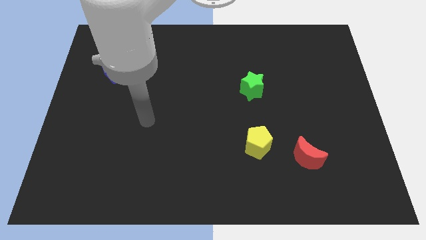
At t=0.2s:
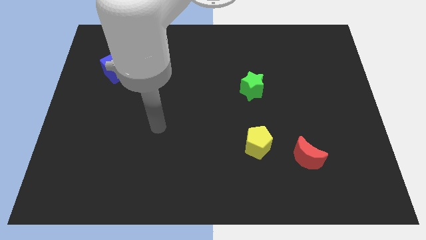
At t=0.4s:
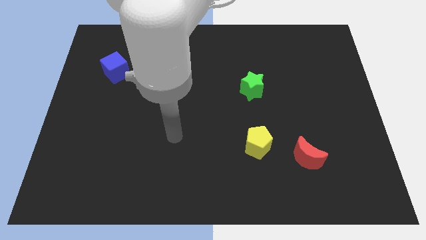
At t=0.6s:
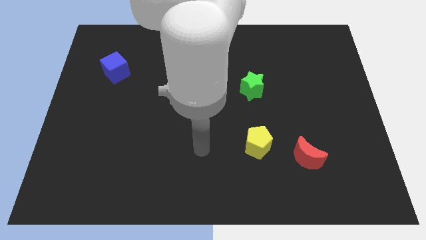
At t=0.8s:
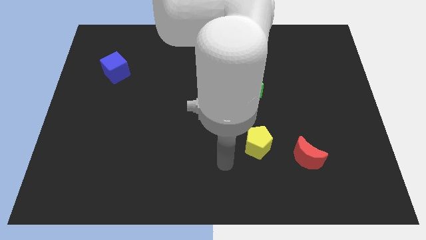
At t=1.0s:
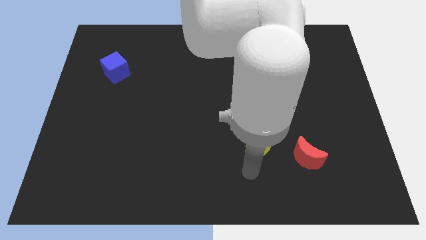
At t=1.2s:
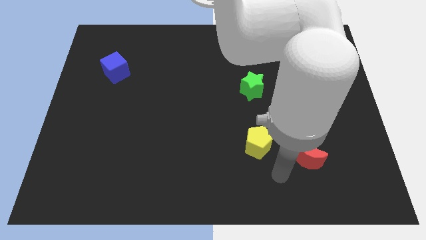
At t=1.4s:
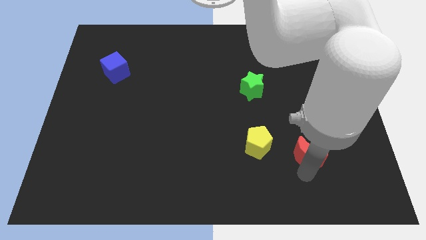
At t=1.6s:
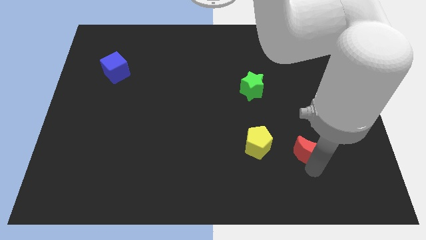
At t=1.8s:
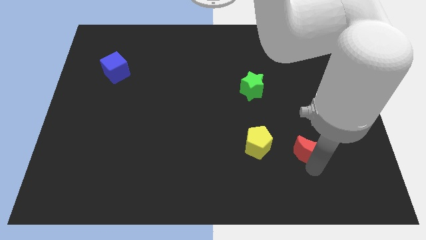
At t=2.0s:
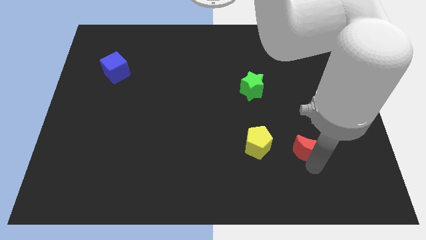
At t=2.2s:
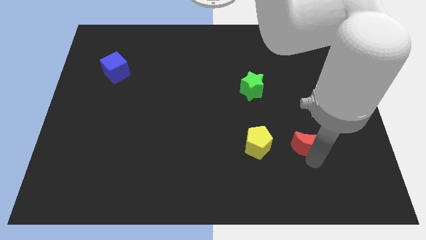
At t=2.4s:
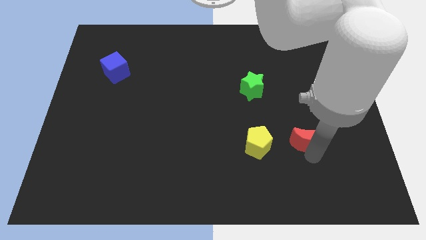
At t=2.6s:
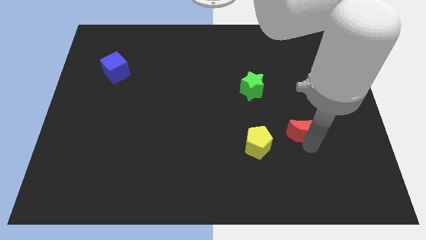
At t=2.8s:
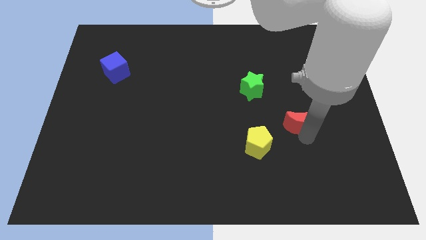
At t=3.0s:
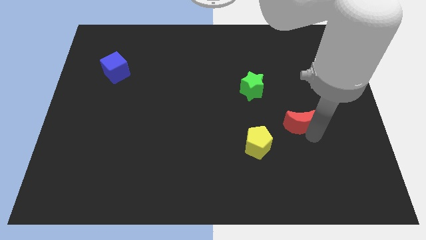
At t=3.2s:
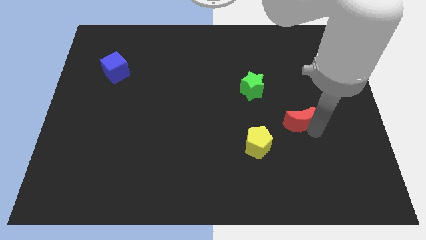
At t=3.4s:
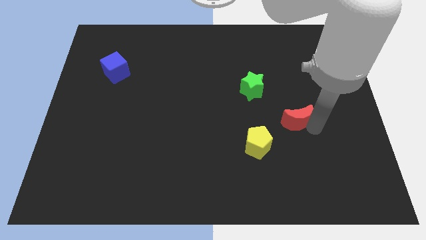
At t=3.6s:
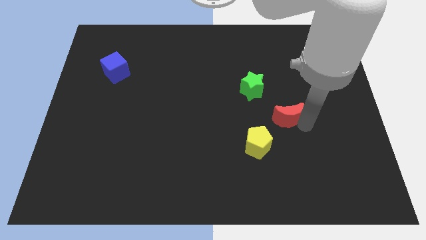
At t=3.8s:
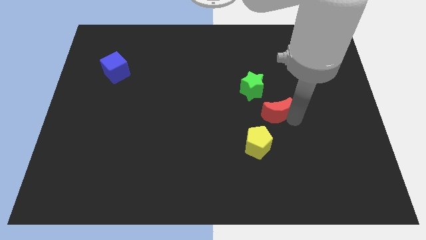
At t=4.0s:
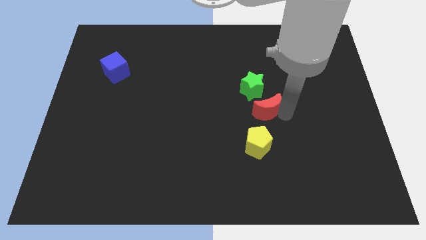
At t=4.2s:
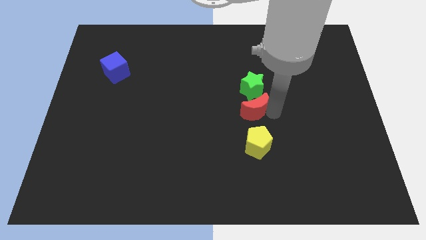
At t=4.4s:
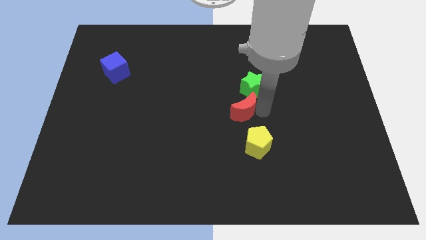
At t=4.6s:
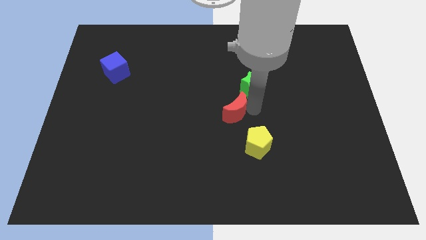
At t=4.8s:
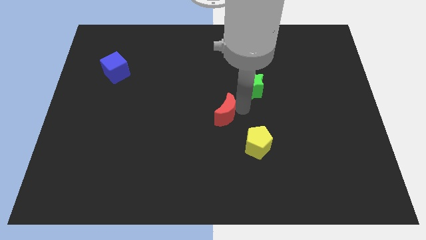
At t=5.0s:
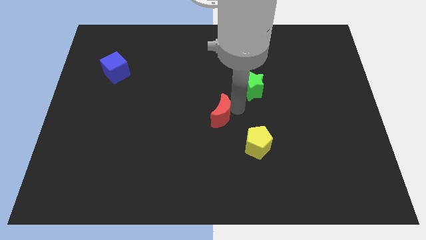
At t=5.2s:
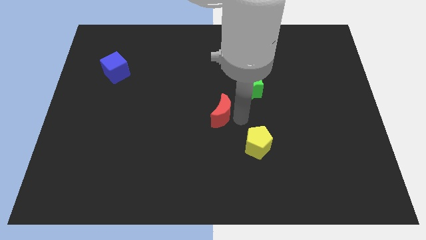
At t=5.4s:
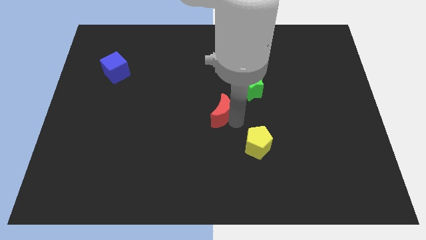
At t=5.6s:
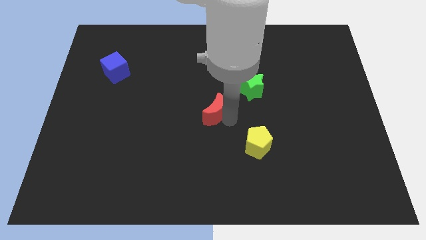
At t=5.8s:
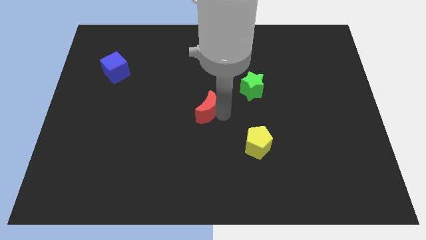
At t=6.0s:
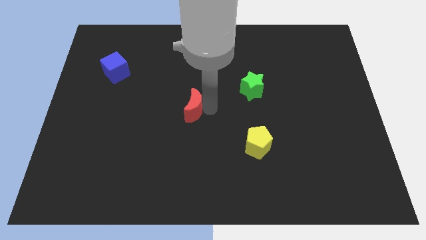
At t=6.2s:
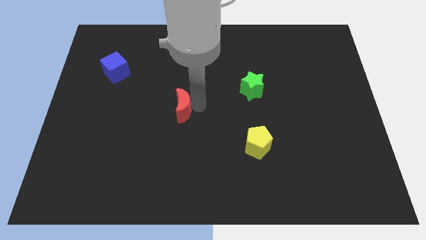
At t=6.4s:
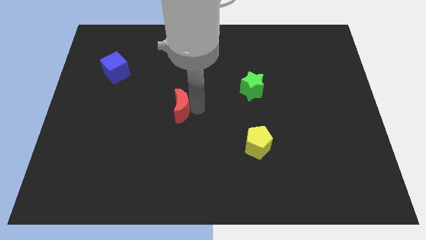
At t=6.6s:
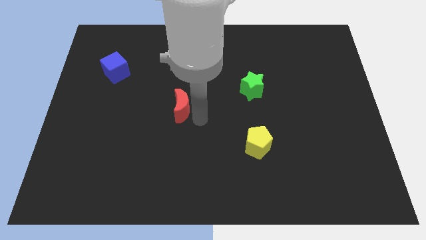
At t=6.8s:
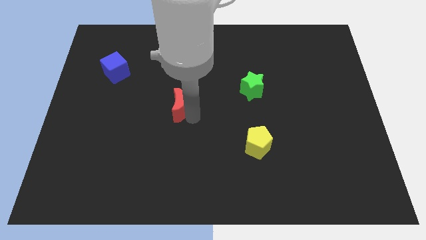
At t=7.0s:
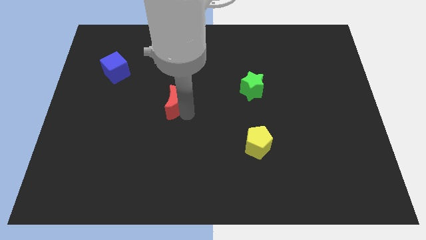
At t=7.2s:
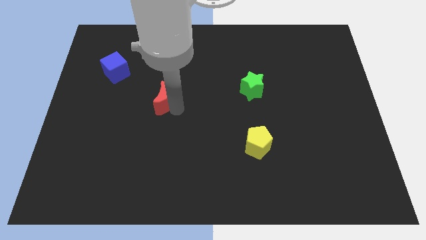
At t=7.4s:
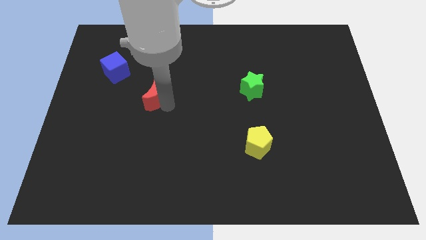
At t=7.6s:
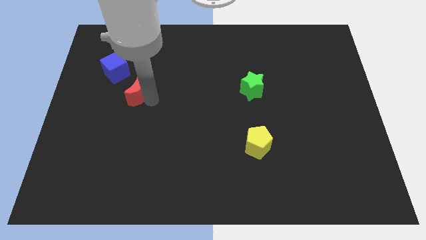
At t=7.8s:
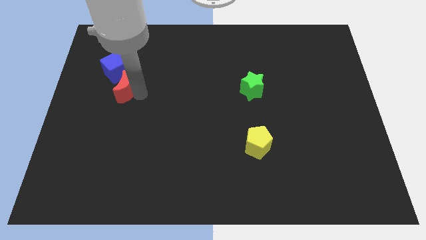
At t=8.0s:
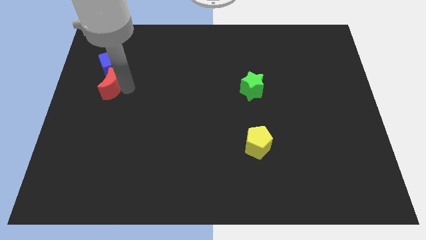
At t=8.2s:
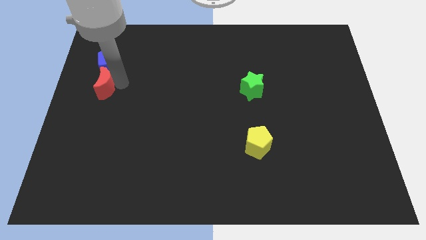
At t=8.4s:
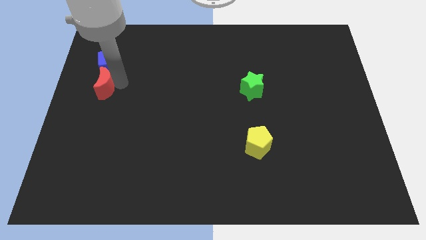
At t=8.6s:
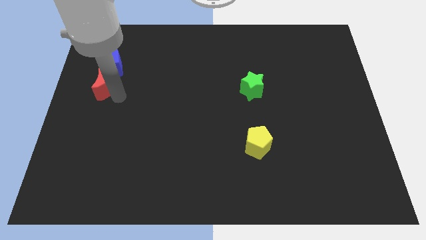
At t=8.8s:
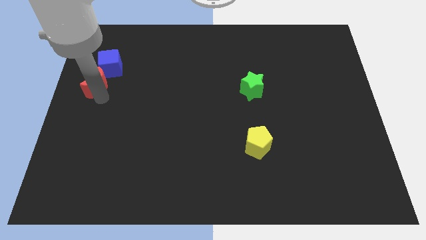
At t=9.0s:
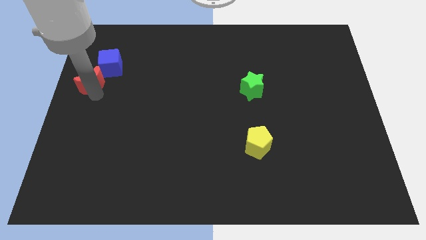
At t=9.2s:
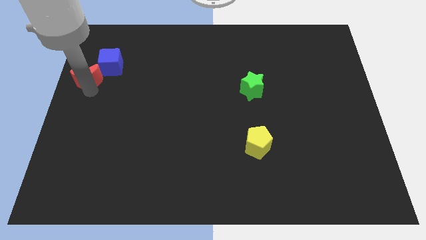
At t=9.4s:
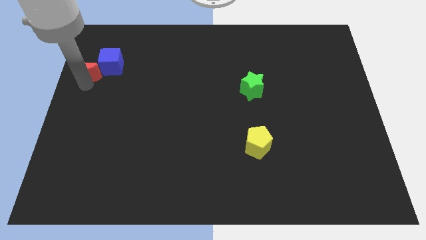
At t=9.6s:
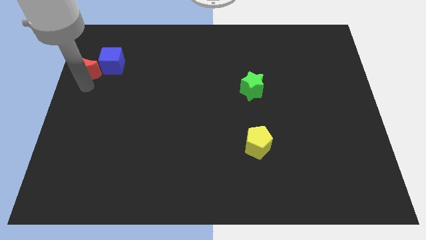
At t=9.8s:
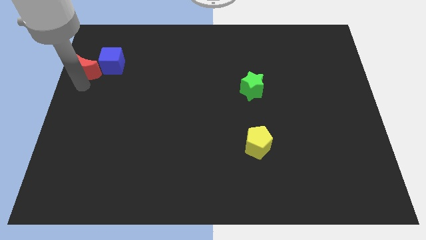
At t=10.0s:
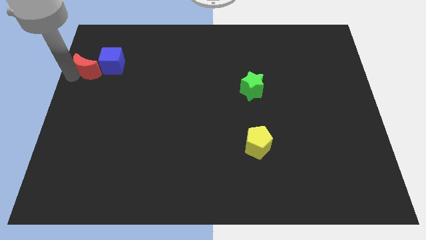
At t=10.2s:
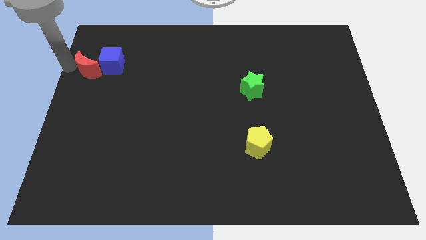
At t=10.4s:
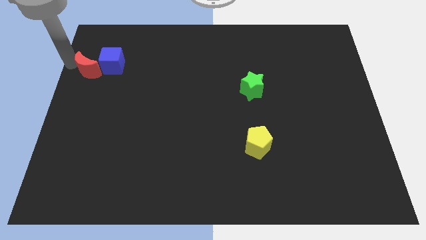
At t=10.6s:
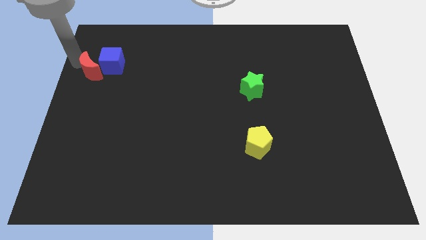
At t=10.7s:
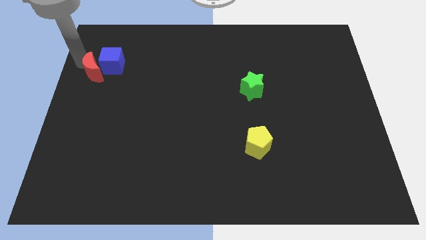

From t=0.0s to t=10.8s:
slide the red moon close to the blue block

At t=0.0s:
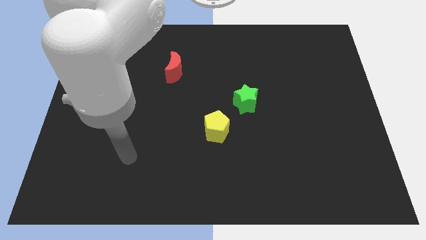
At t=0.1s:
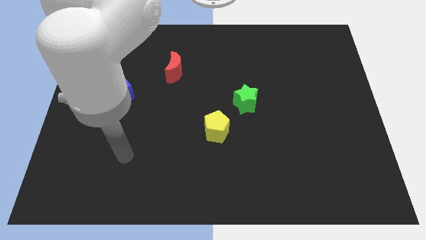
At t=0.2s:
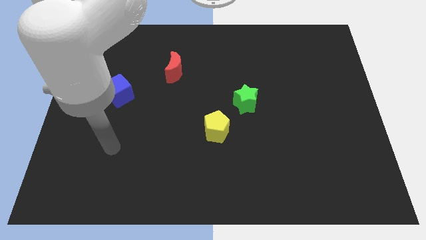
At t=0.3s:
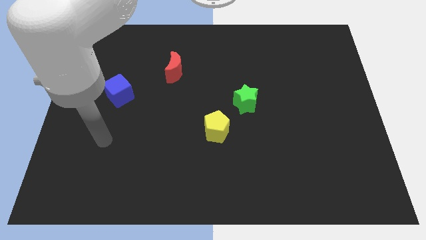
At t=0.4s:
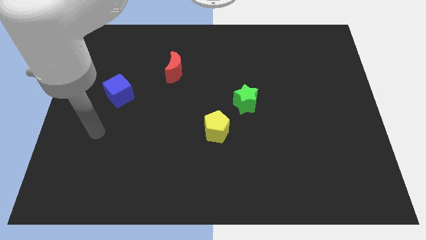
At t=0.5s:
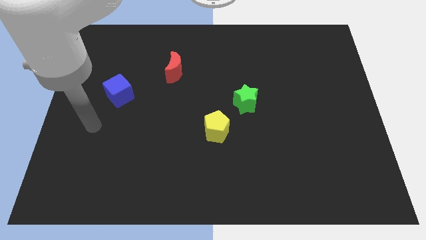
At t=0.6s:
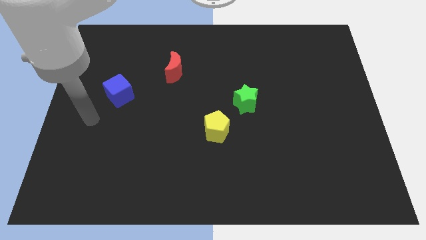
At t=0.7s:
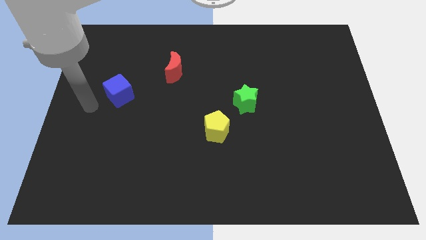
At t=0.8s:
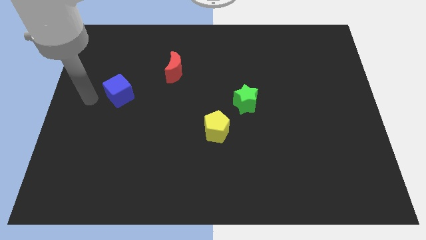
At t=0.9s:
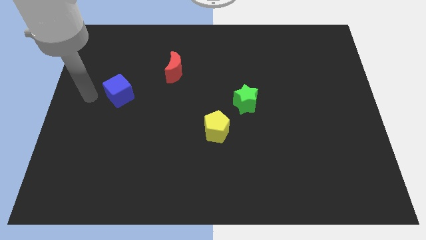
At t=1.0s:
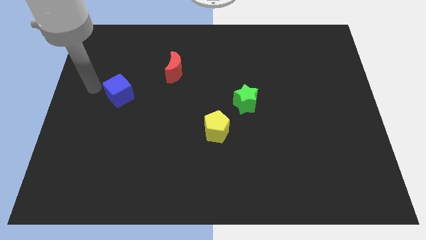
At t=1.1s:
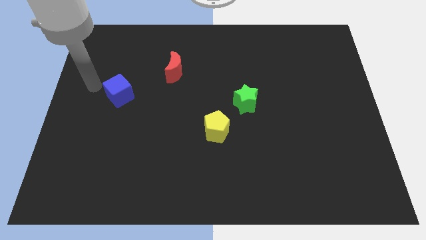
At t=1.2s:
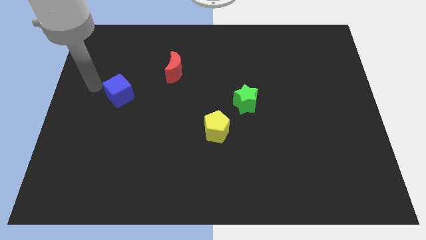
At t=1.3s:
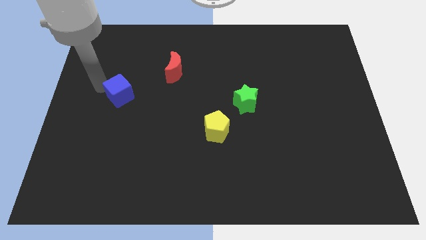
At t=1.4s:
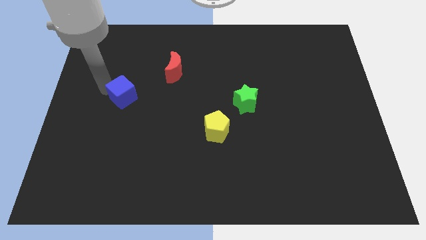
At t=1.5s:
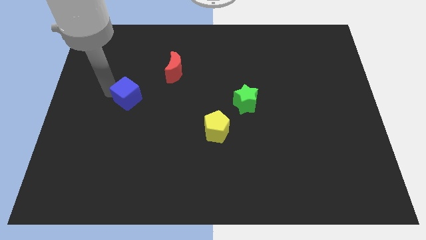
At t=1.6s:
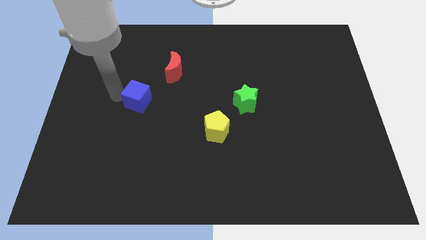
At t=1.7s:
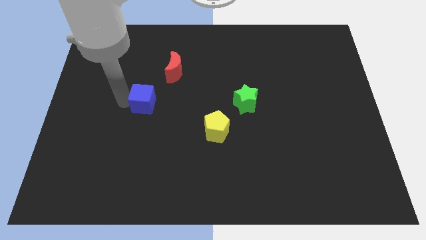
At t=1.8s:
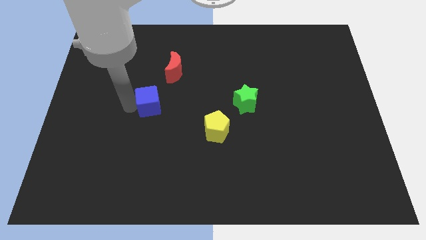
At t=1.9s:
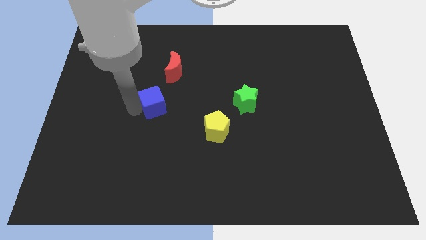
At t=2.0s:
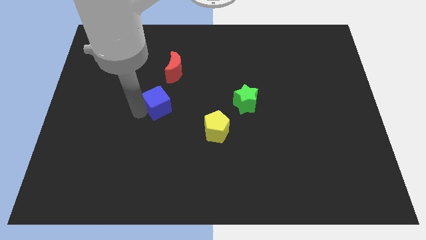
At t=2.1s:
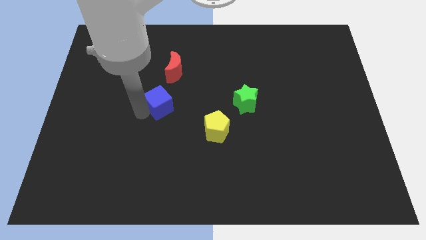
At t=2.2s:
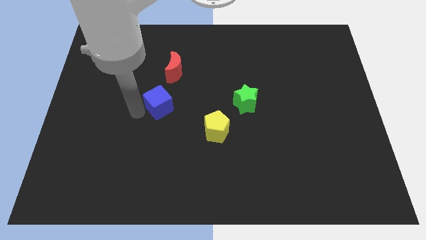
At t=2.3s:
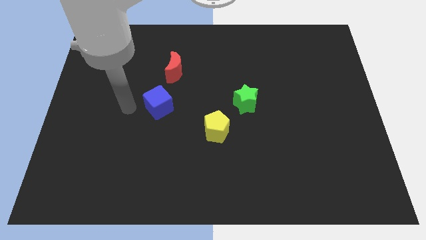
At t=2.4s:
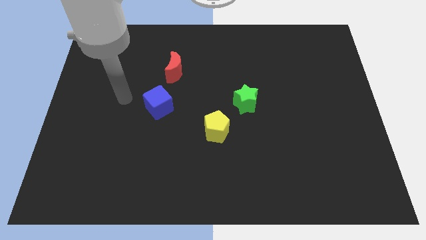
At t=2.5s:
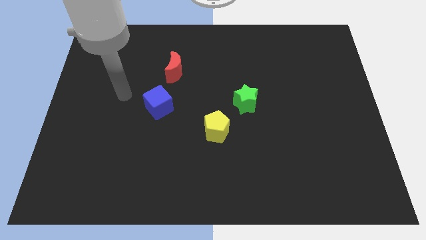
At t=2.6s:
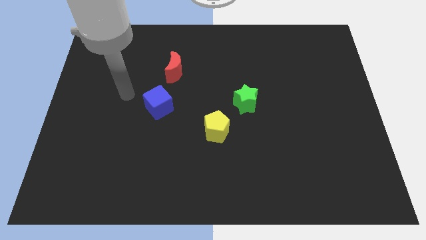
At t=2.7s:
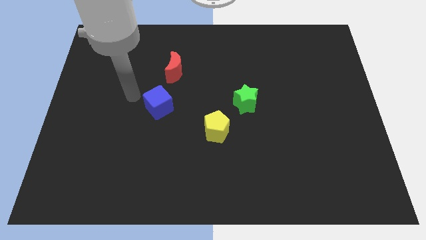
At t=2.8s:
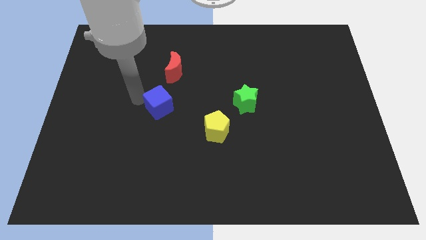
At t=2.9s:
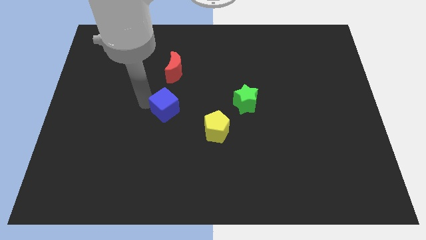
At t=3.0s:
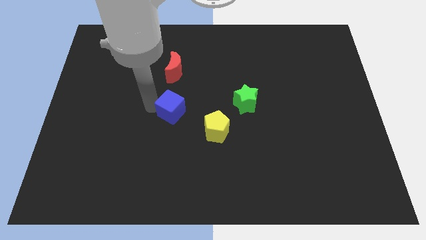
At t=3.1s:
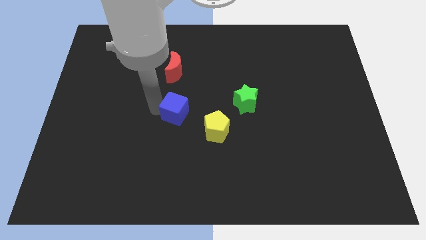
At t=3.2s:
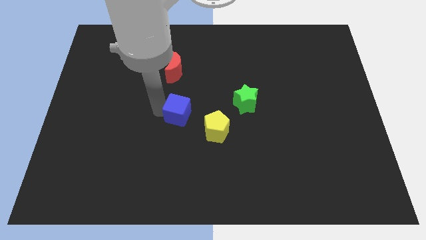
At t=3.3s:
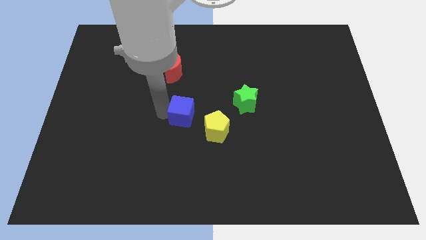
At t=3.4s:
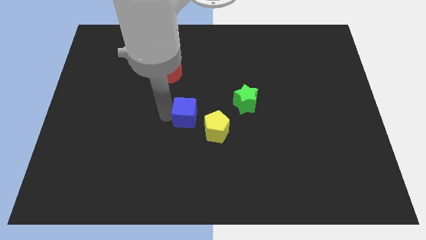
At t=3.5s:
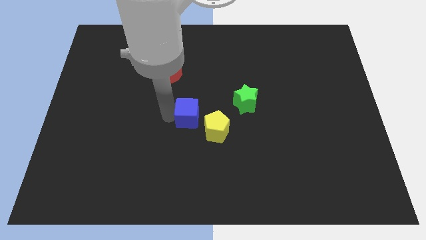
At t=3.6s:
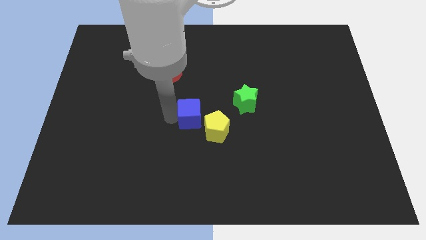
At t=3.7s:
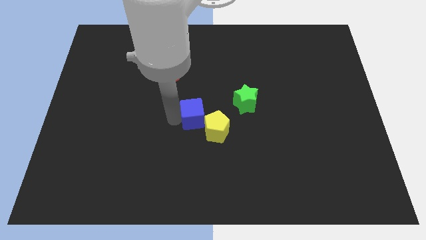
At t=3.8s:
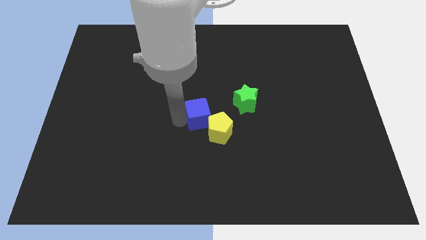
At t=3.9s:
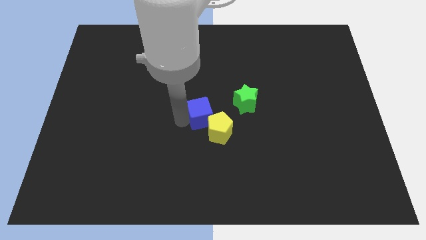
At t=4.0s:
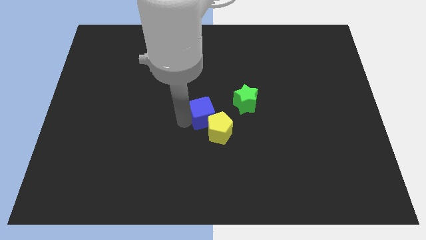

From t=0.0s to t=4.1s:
slide the blue cube to the pentagon
